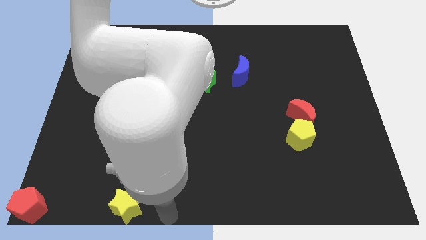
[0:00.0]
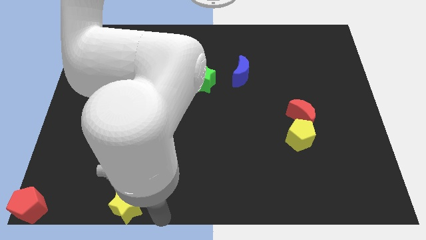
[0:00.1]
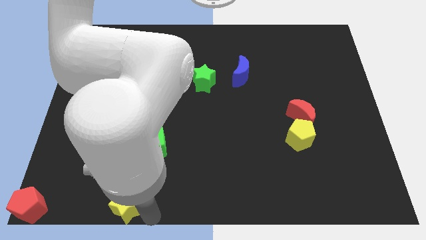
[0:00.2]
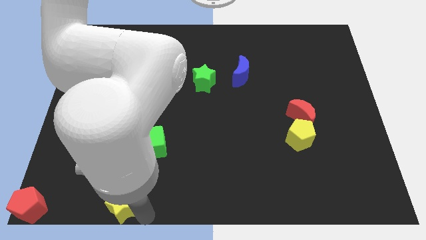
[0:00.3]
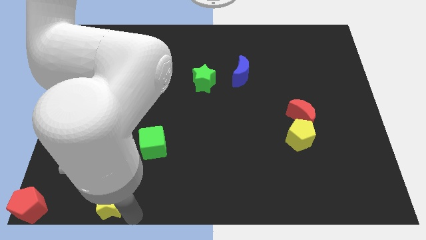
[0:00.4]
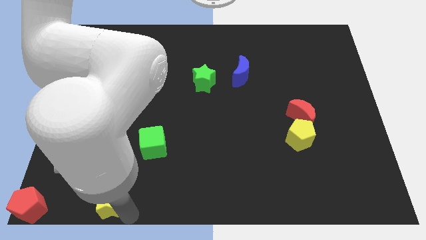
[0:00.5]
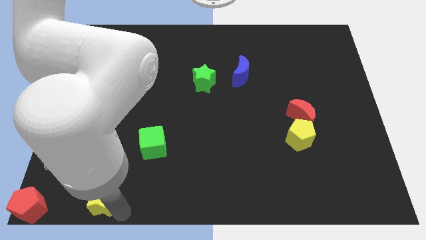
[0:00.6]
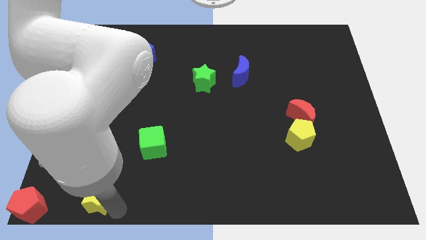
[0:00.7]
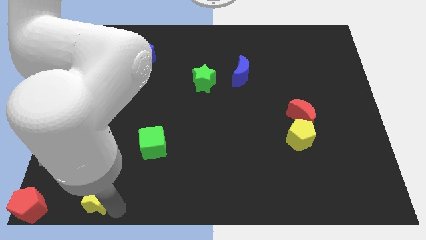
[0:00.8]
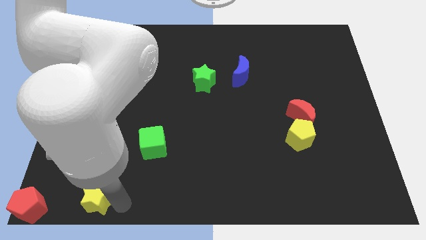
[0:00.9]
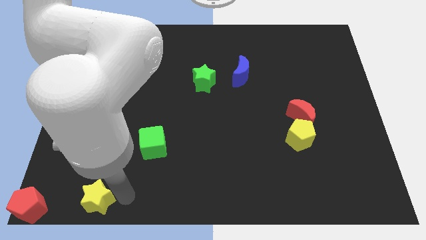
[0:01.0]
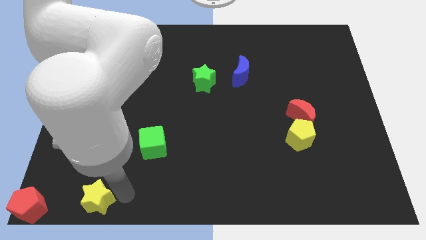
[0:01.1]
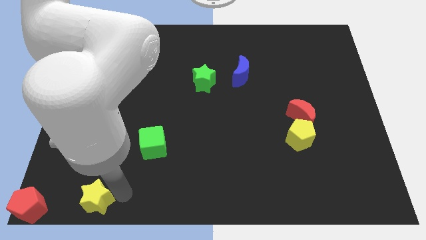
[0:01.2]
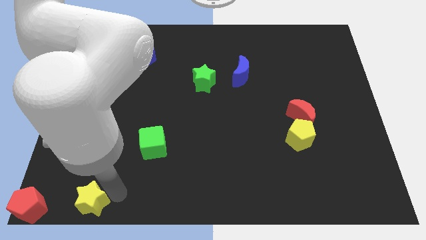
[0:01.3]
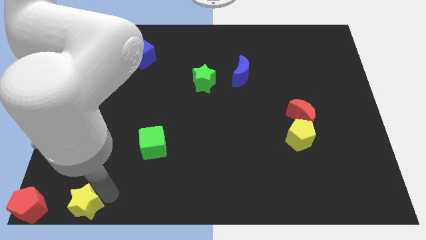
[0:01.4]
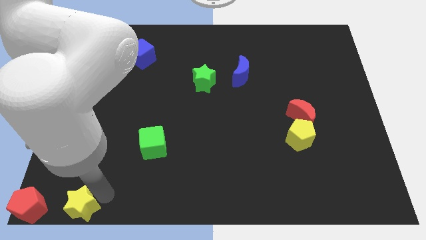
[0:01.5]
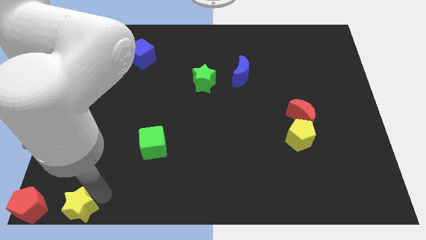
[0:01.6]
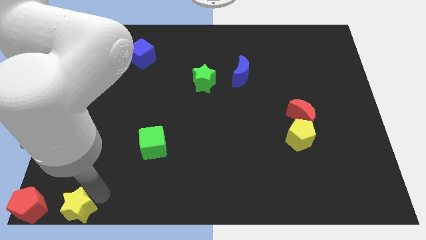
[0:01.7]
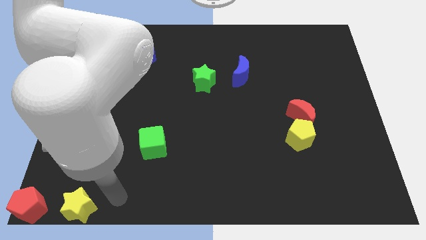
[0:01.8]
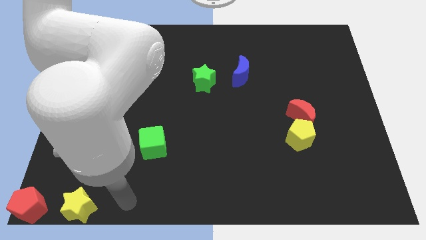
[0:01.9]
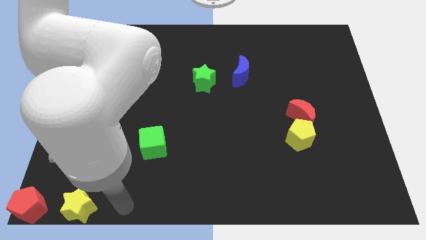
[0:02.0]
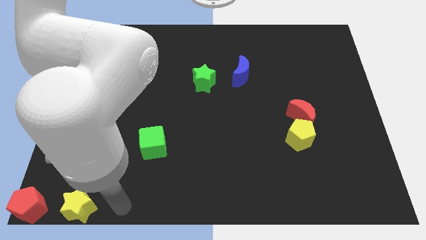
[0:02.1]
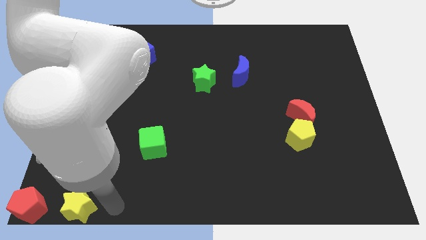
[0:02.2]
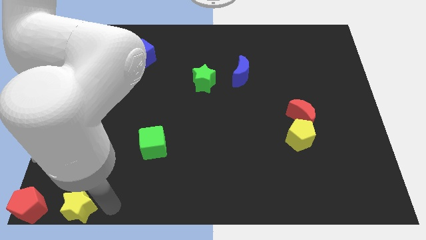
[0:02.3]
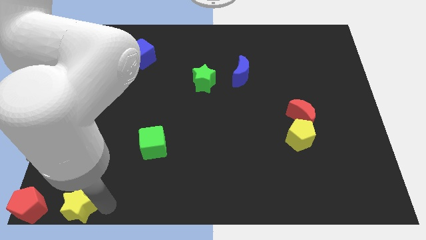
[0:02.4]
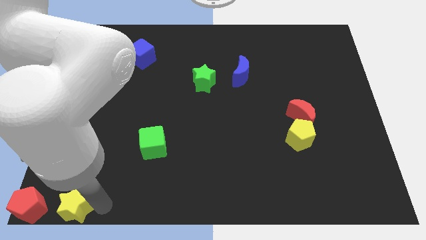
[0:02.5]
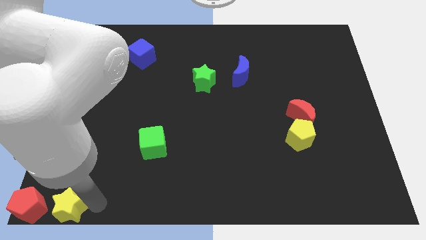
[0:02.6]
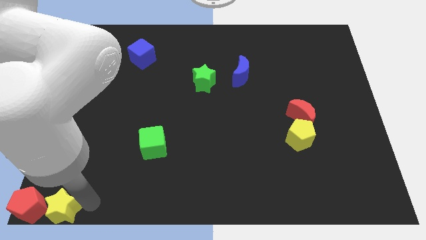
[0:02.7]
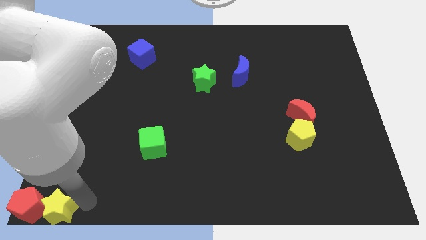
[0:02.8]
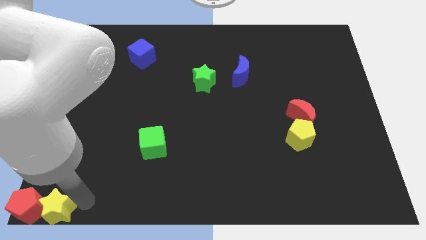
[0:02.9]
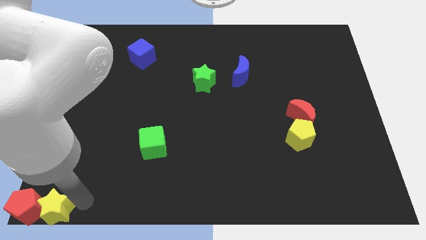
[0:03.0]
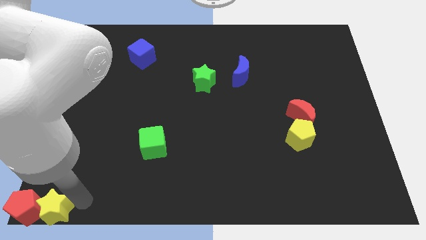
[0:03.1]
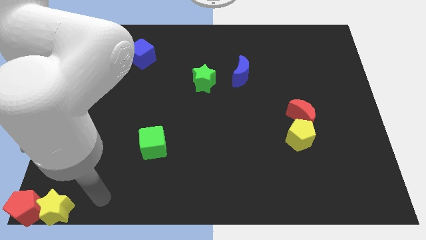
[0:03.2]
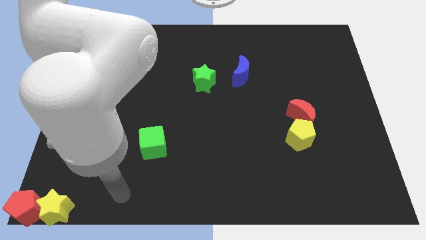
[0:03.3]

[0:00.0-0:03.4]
move the yellow star into the right side of the red pentagon

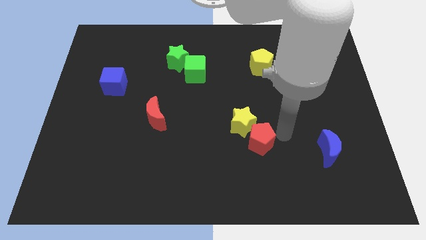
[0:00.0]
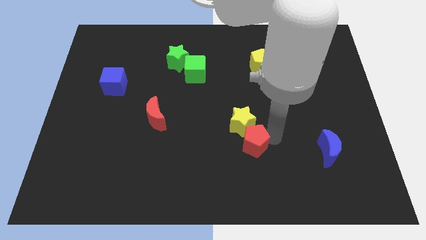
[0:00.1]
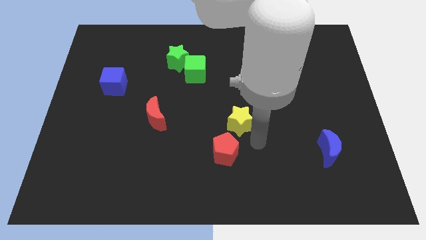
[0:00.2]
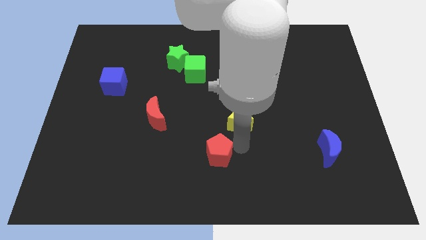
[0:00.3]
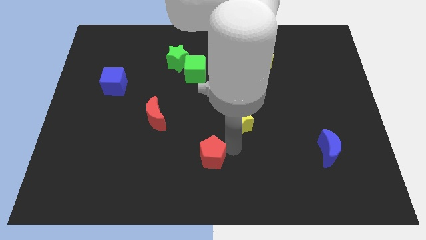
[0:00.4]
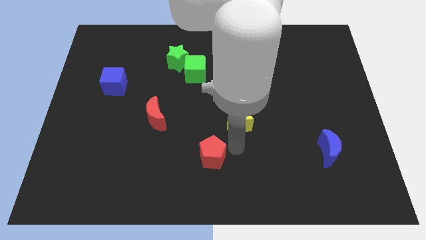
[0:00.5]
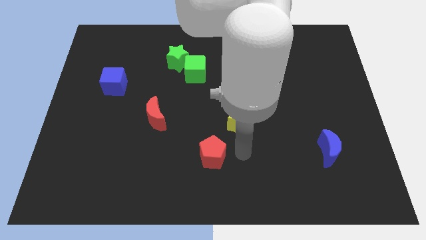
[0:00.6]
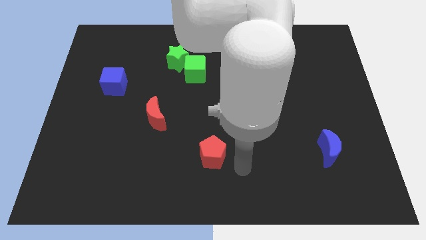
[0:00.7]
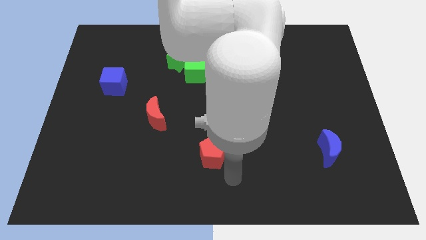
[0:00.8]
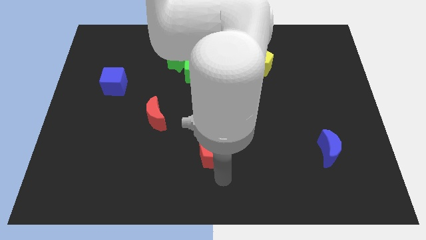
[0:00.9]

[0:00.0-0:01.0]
separate the red pentagon from yellow star

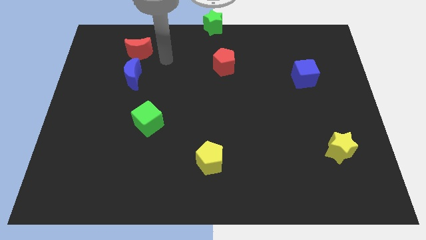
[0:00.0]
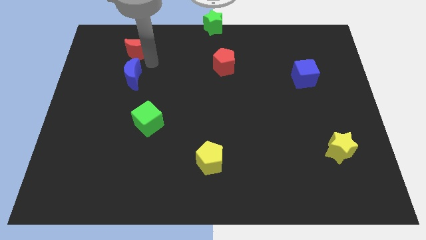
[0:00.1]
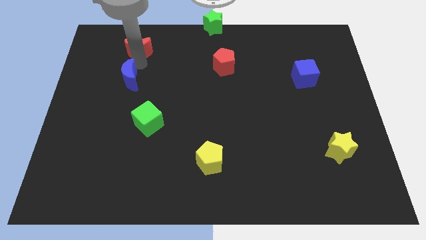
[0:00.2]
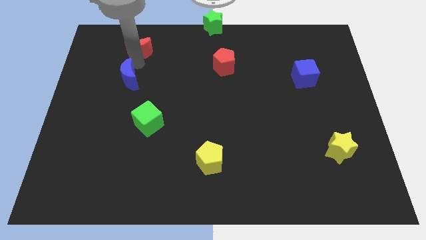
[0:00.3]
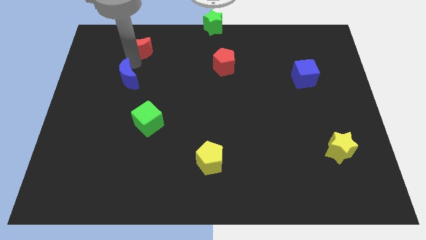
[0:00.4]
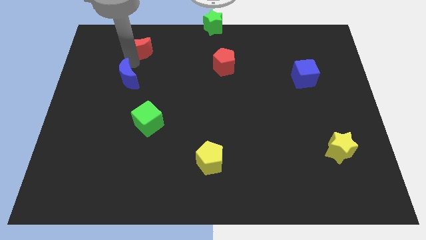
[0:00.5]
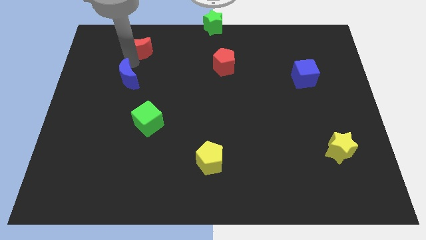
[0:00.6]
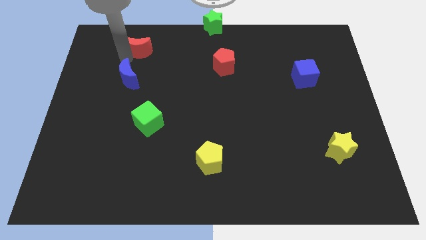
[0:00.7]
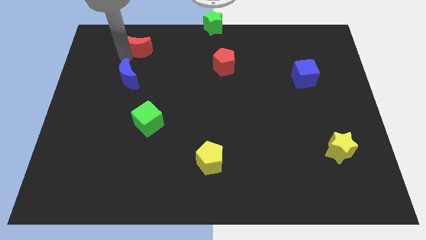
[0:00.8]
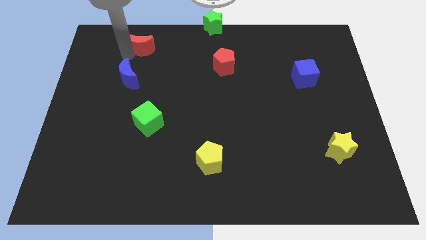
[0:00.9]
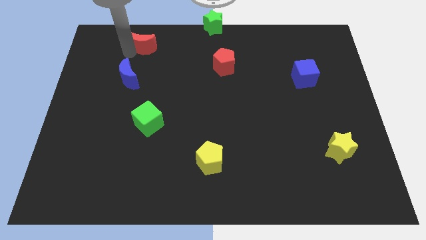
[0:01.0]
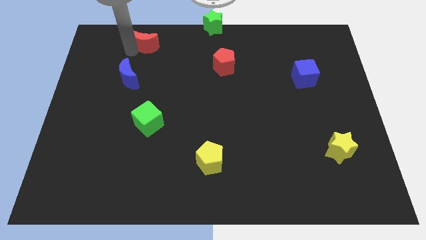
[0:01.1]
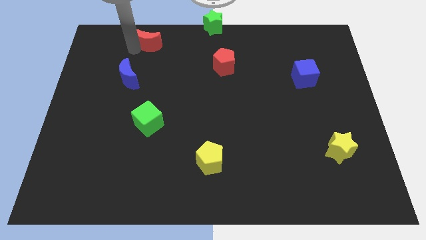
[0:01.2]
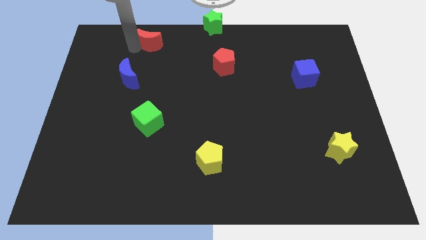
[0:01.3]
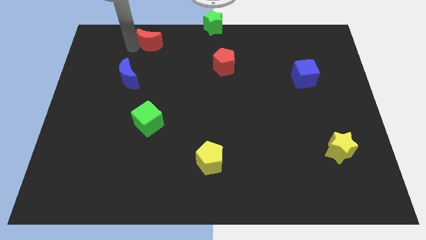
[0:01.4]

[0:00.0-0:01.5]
separate red moon and the blue moon

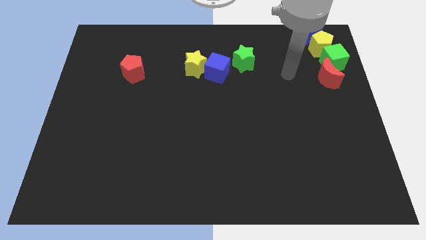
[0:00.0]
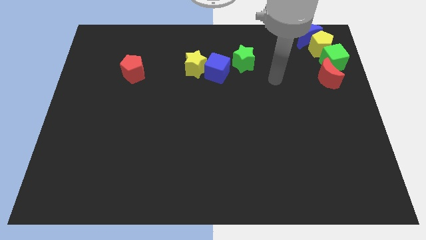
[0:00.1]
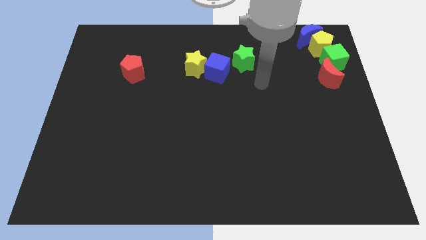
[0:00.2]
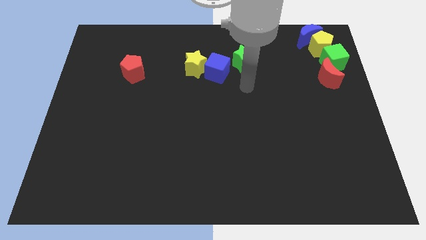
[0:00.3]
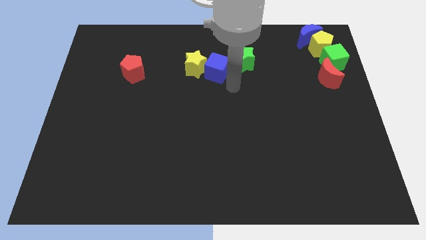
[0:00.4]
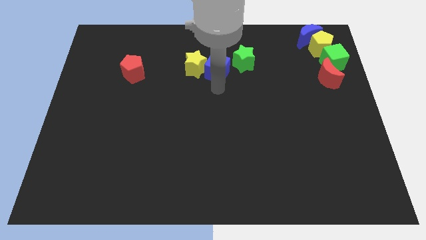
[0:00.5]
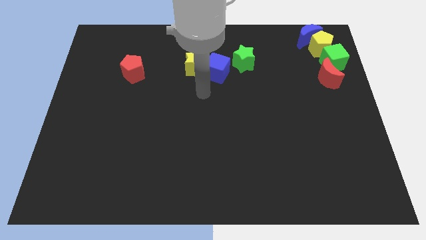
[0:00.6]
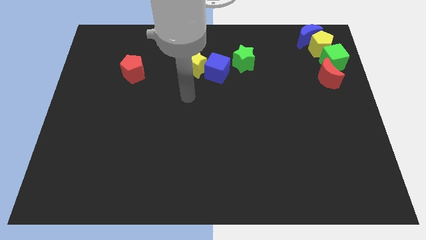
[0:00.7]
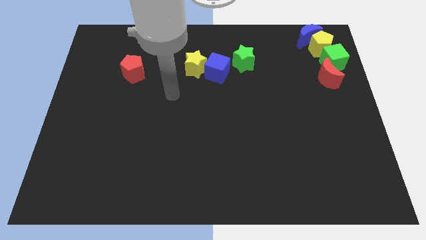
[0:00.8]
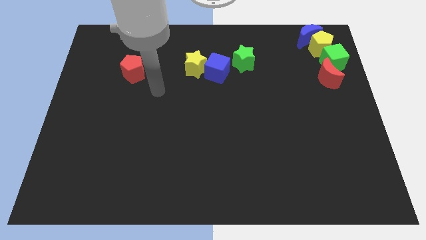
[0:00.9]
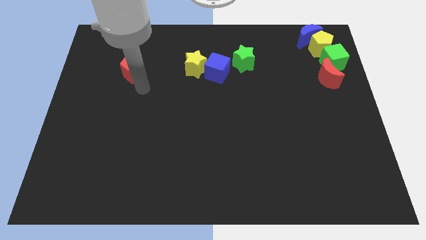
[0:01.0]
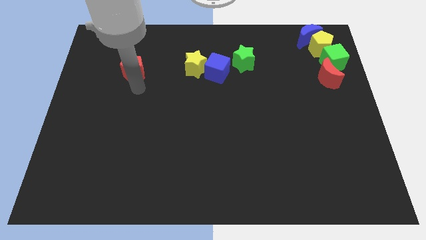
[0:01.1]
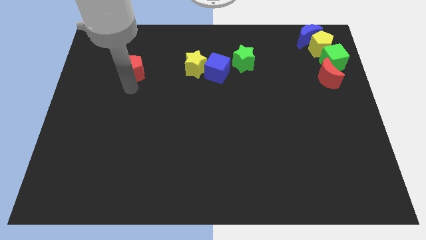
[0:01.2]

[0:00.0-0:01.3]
point your arm to the bottom side of red pentagon

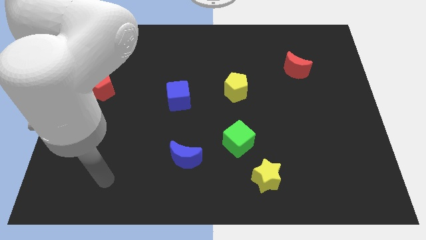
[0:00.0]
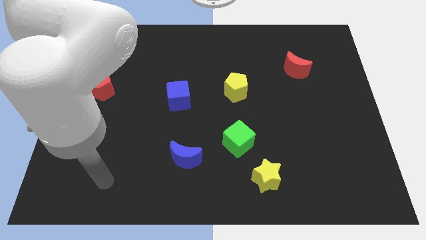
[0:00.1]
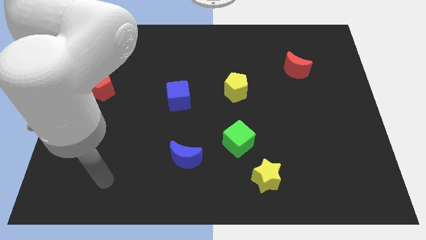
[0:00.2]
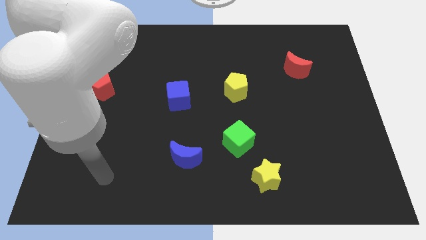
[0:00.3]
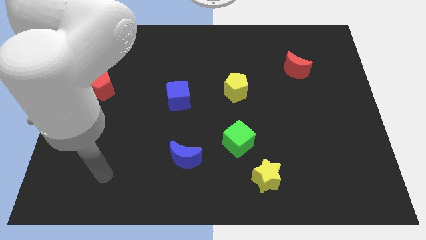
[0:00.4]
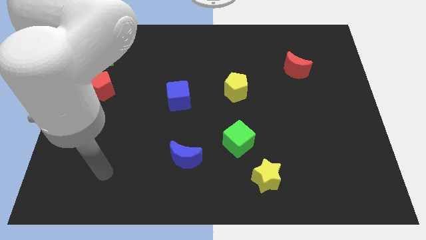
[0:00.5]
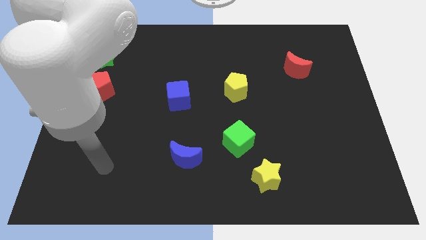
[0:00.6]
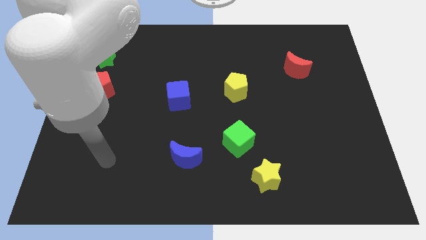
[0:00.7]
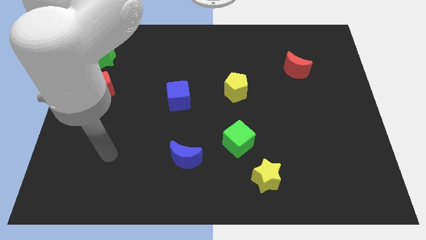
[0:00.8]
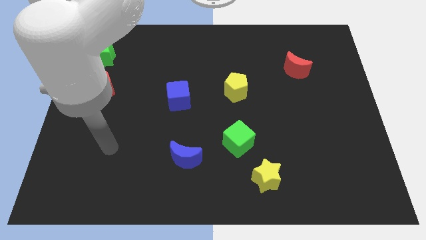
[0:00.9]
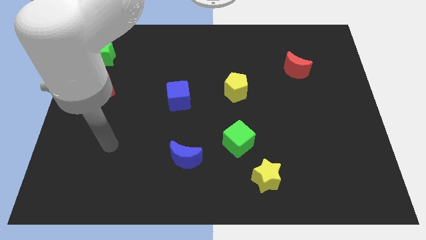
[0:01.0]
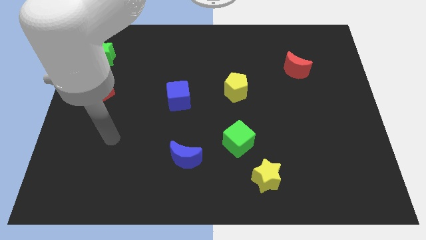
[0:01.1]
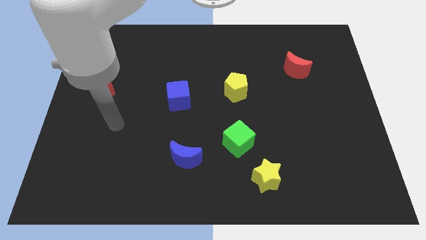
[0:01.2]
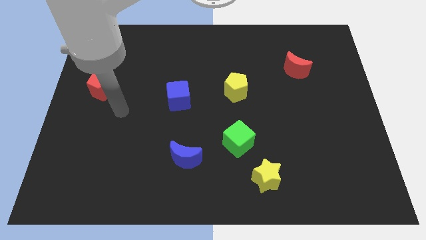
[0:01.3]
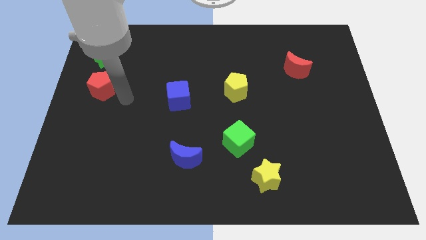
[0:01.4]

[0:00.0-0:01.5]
move your arm right to the red pentagon

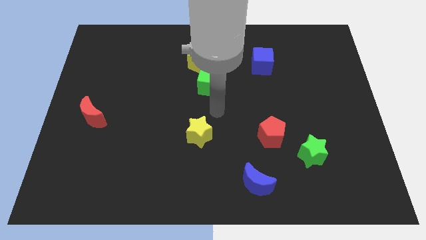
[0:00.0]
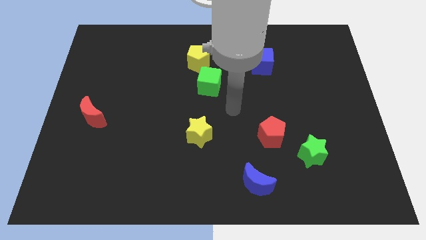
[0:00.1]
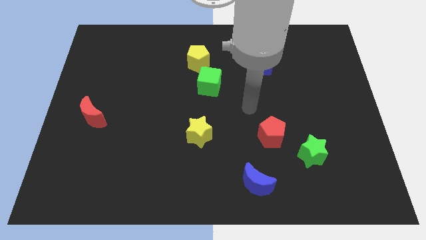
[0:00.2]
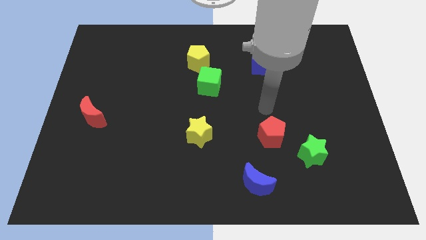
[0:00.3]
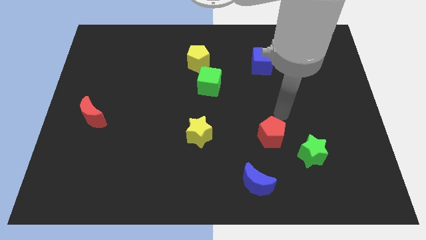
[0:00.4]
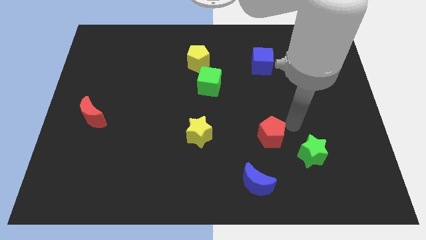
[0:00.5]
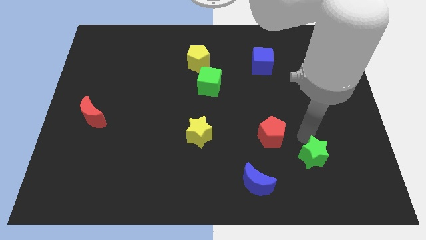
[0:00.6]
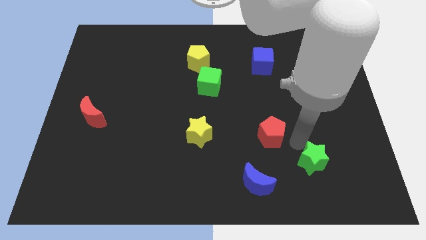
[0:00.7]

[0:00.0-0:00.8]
move your arm to the top side of the green star
